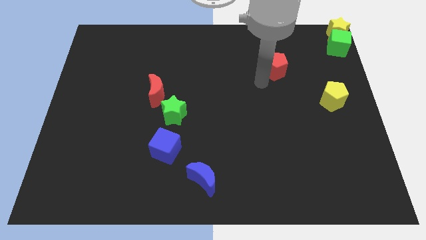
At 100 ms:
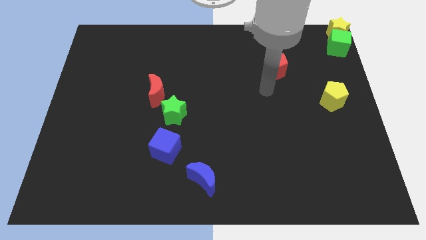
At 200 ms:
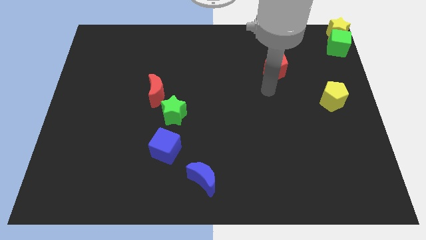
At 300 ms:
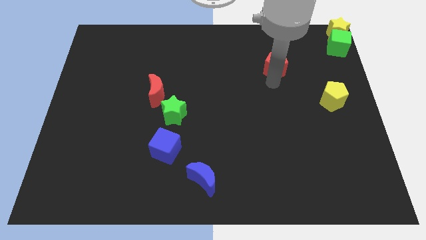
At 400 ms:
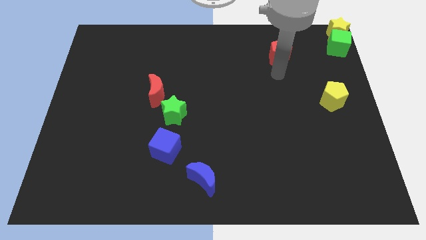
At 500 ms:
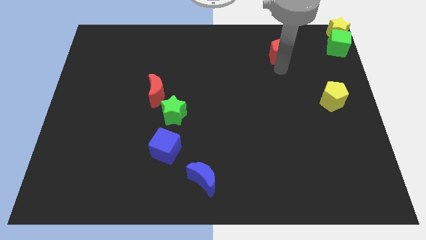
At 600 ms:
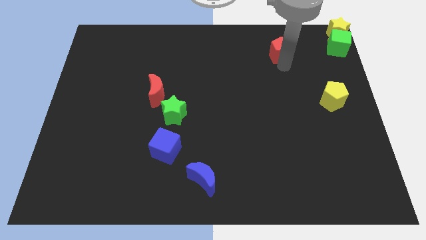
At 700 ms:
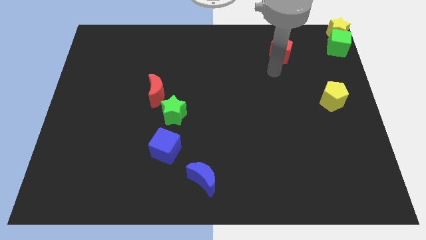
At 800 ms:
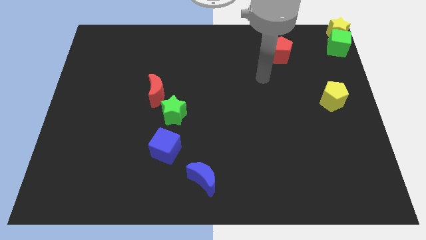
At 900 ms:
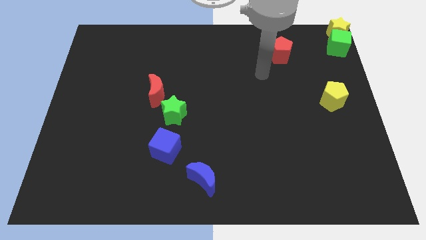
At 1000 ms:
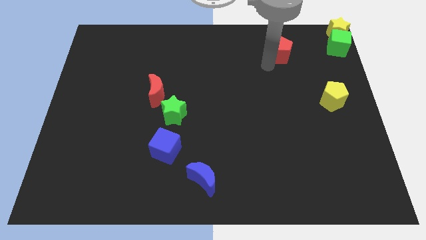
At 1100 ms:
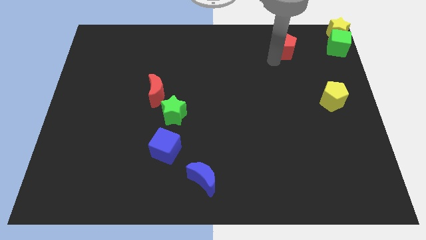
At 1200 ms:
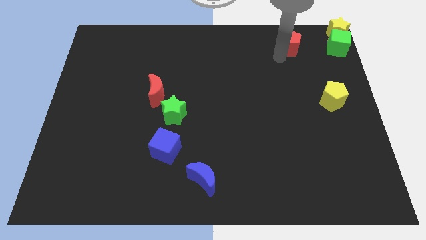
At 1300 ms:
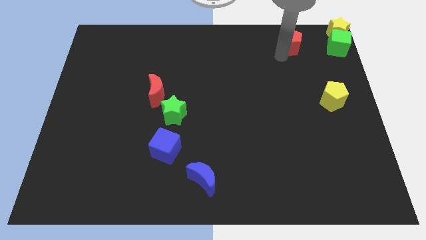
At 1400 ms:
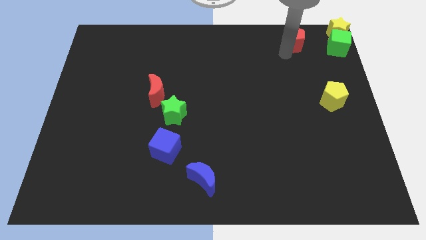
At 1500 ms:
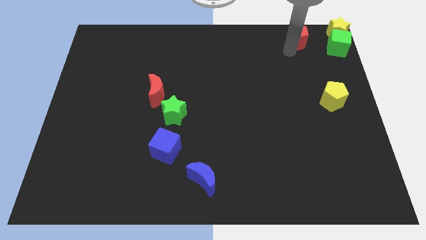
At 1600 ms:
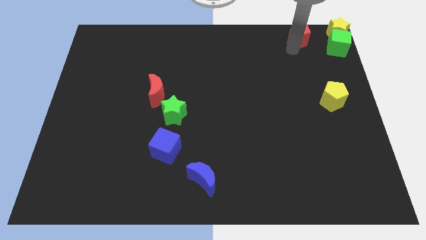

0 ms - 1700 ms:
place the red pentagon left to the green cube

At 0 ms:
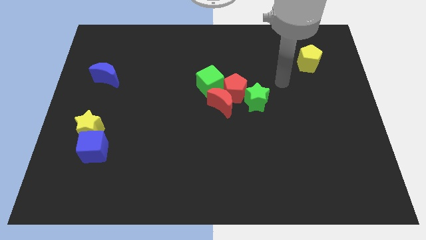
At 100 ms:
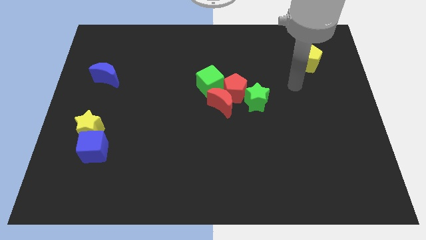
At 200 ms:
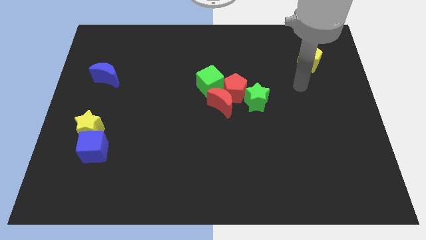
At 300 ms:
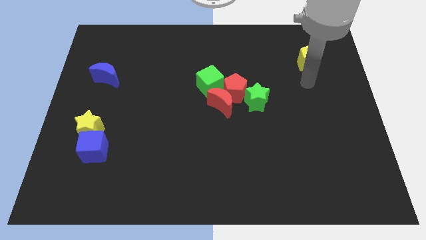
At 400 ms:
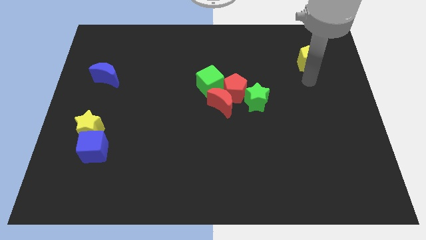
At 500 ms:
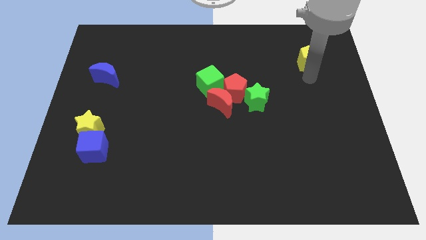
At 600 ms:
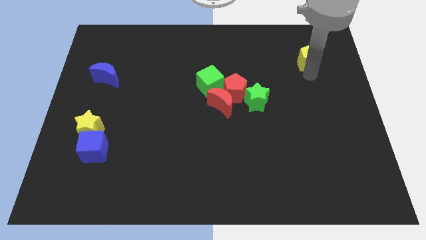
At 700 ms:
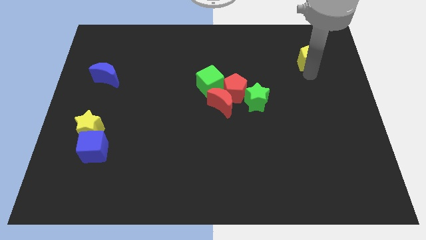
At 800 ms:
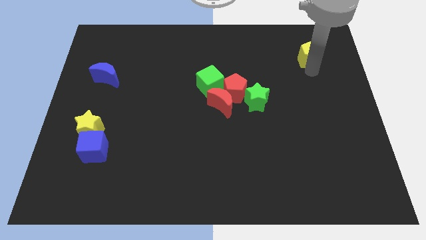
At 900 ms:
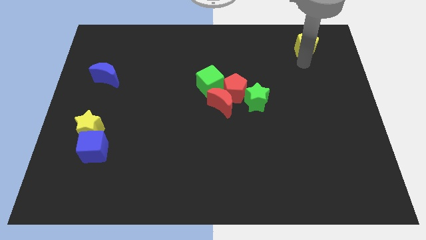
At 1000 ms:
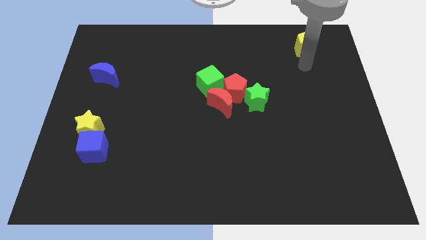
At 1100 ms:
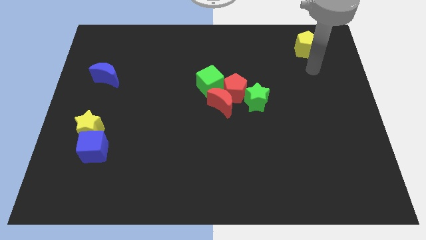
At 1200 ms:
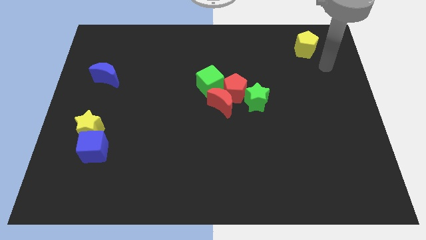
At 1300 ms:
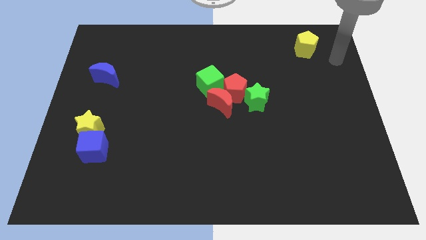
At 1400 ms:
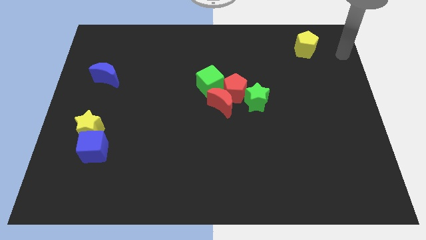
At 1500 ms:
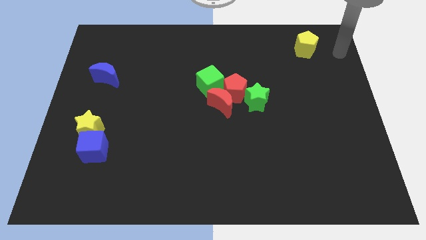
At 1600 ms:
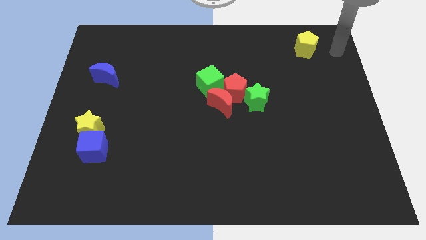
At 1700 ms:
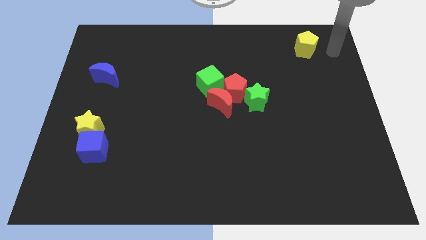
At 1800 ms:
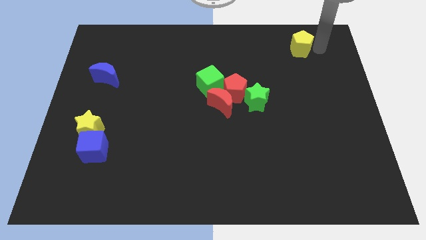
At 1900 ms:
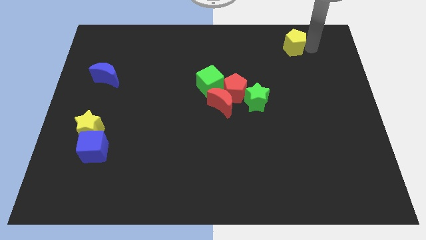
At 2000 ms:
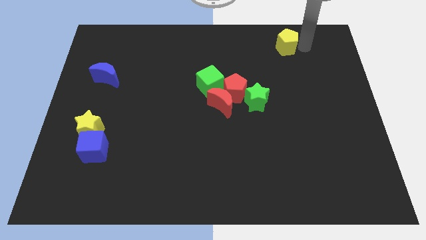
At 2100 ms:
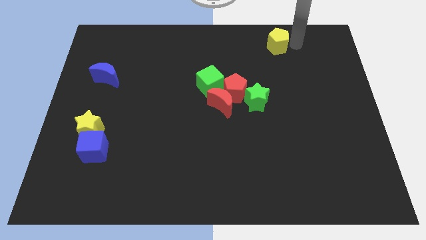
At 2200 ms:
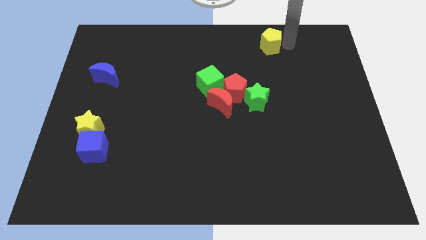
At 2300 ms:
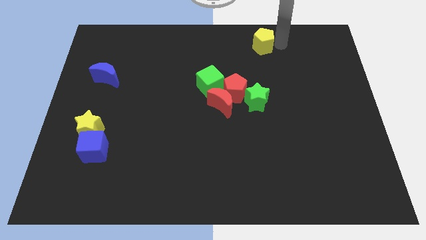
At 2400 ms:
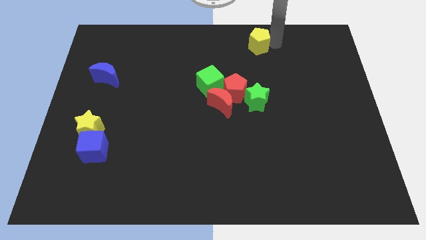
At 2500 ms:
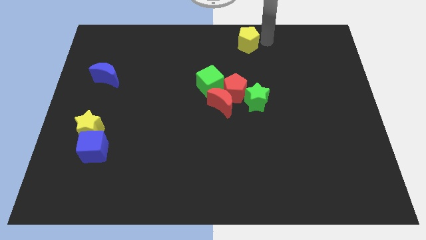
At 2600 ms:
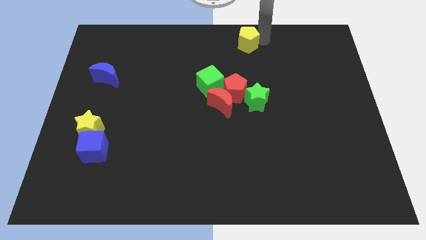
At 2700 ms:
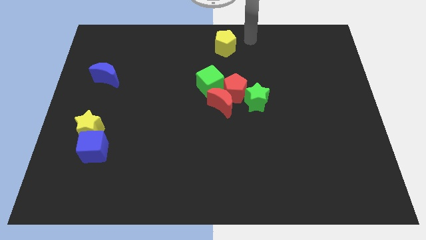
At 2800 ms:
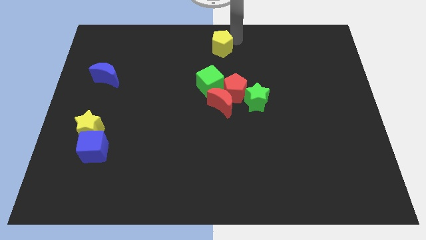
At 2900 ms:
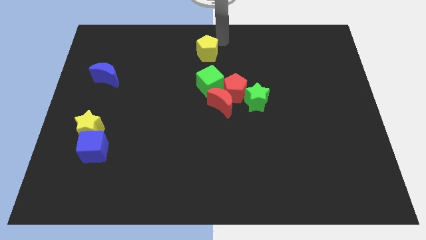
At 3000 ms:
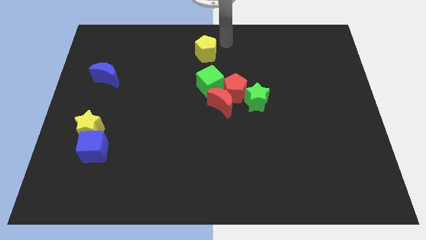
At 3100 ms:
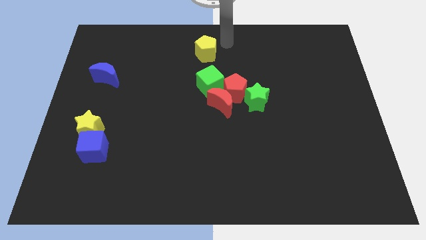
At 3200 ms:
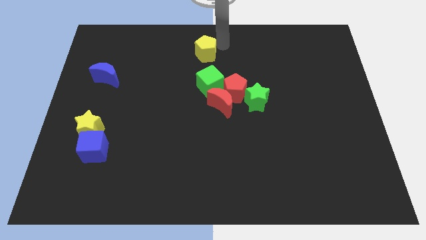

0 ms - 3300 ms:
place the yellow pentagon to vertically to the top side of the green cube

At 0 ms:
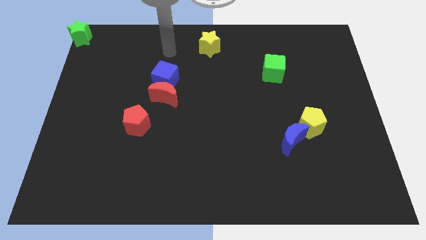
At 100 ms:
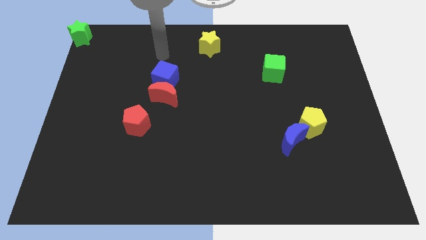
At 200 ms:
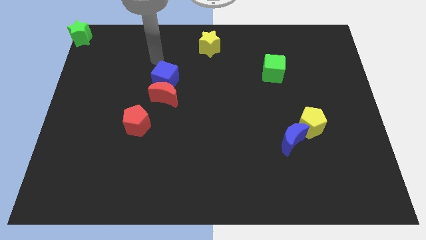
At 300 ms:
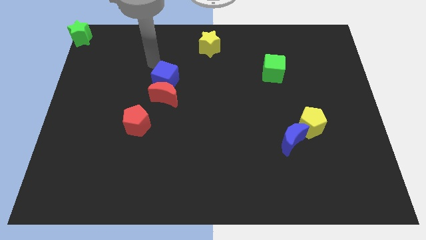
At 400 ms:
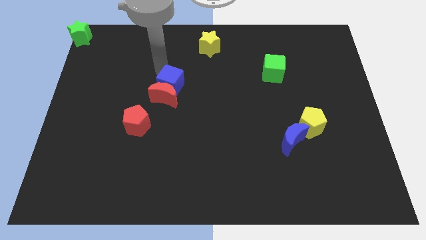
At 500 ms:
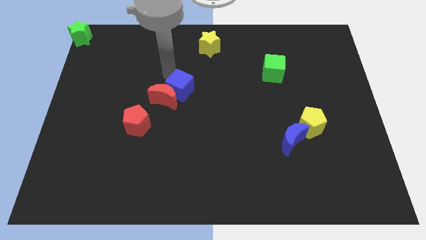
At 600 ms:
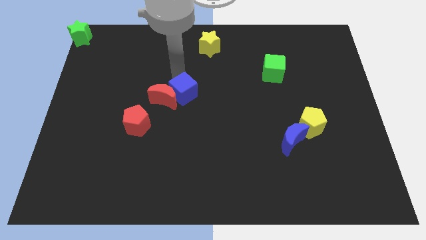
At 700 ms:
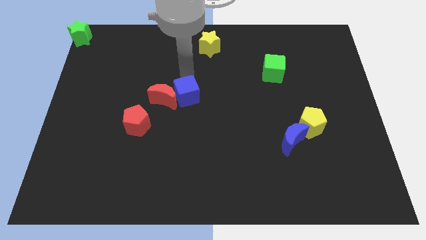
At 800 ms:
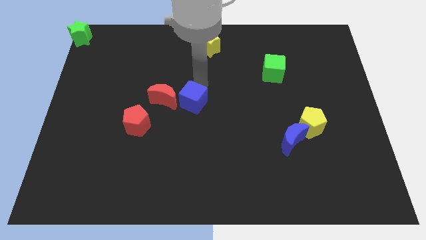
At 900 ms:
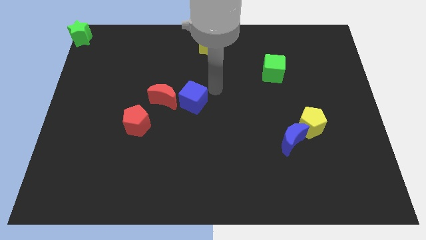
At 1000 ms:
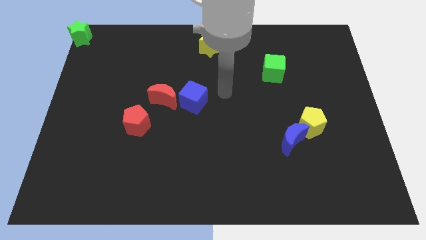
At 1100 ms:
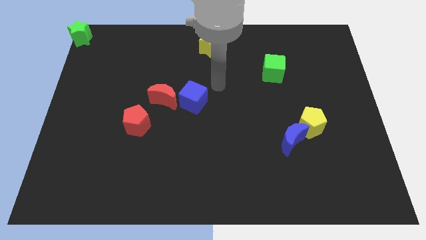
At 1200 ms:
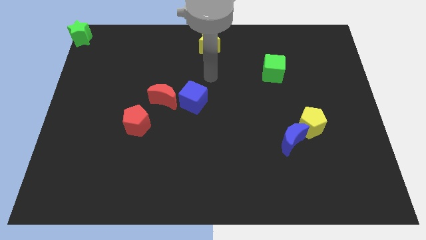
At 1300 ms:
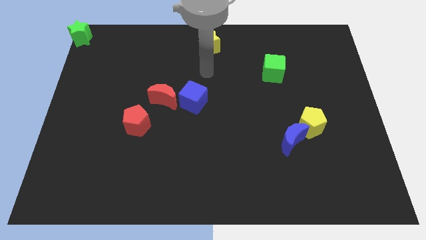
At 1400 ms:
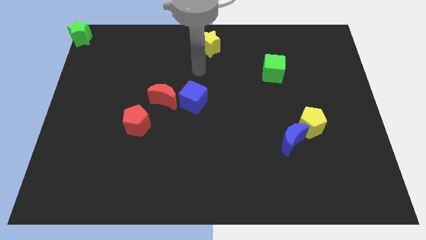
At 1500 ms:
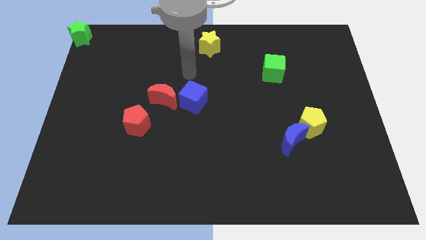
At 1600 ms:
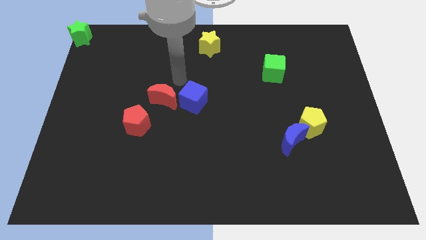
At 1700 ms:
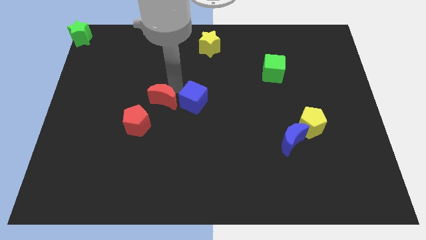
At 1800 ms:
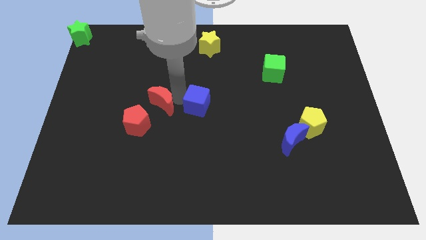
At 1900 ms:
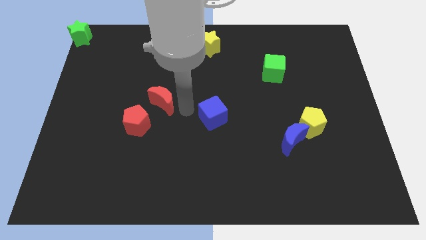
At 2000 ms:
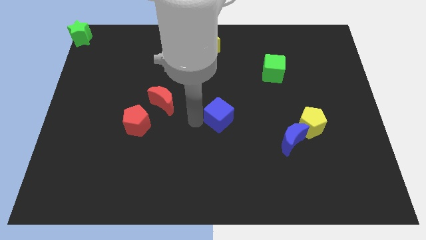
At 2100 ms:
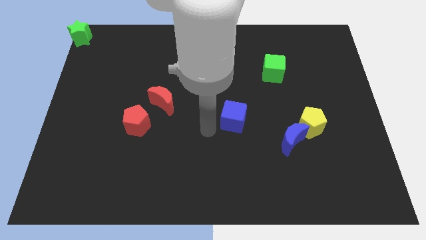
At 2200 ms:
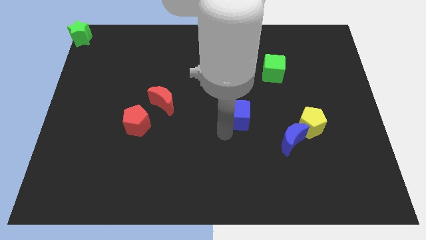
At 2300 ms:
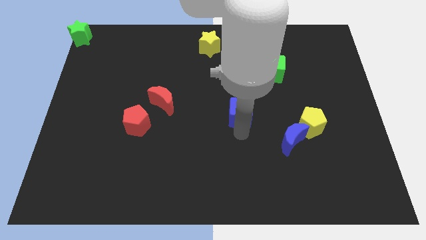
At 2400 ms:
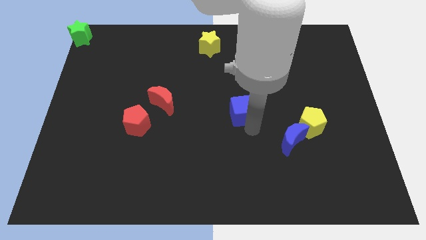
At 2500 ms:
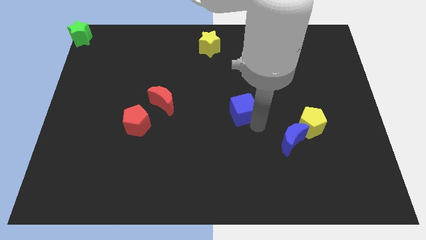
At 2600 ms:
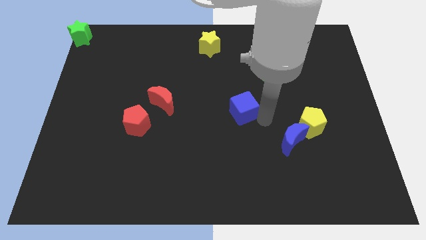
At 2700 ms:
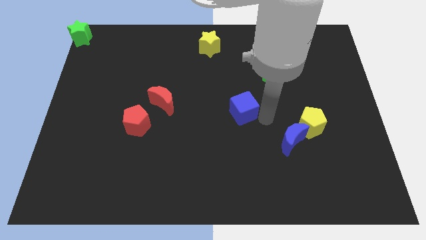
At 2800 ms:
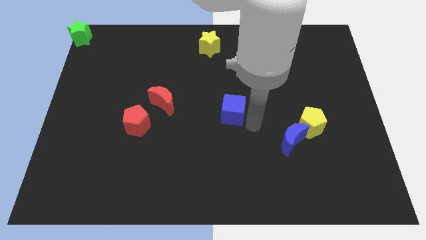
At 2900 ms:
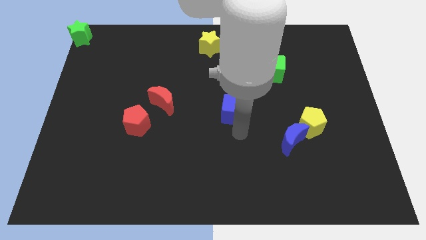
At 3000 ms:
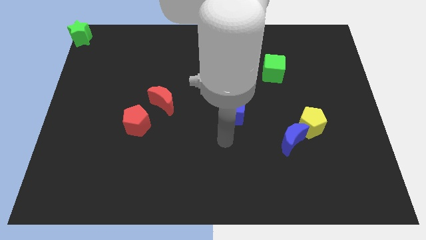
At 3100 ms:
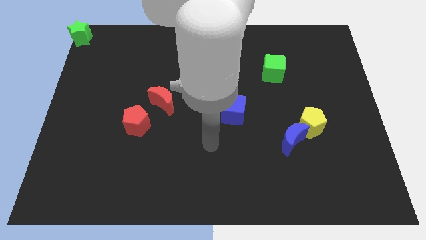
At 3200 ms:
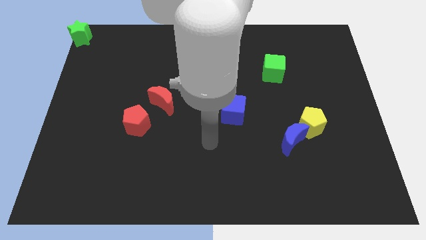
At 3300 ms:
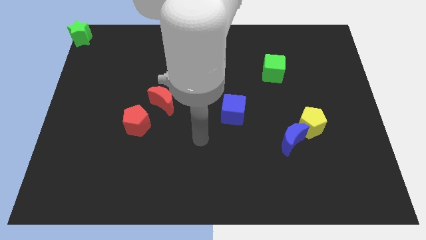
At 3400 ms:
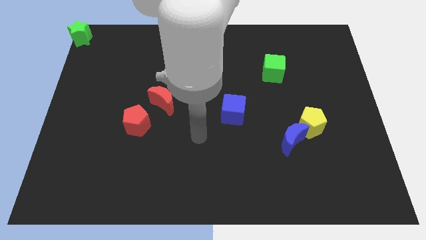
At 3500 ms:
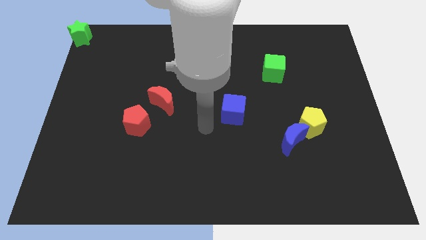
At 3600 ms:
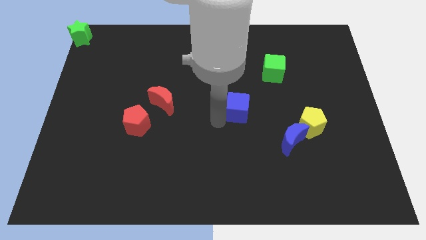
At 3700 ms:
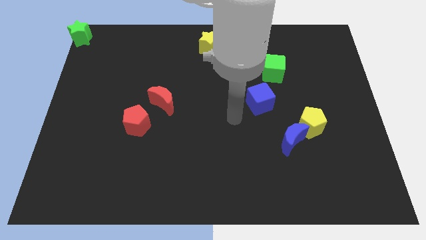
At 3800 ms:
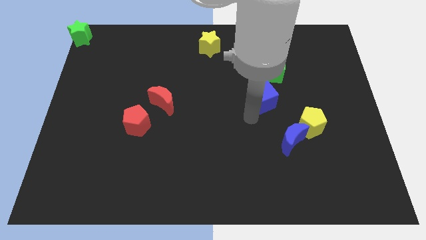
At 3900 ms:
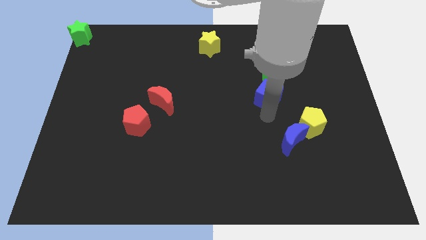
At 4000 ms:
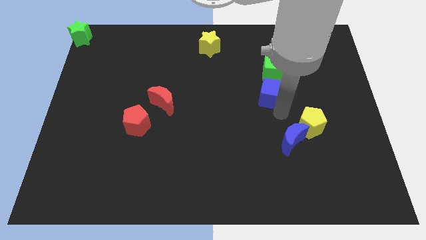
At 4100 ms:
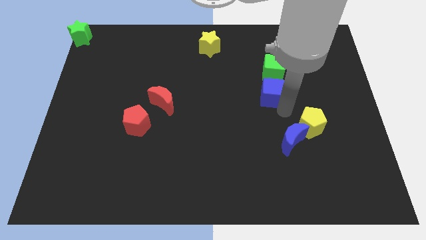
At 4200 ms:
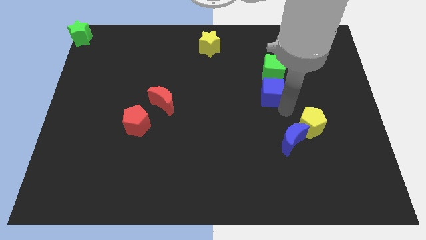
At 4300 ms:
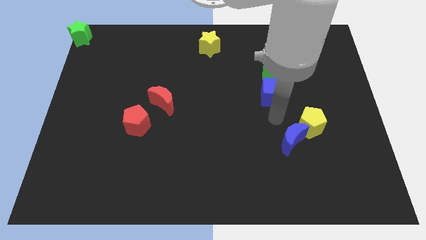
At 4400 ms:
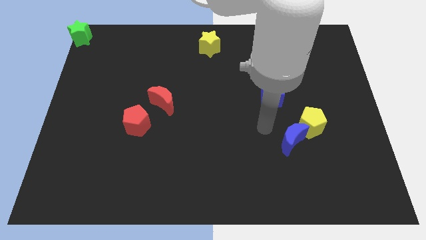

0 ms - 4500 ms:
move the blue cube below the green cube
